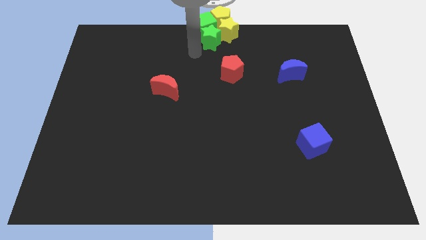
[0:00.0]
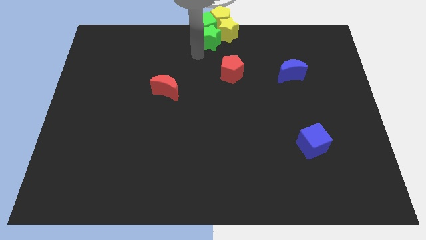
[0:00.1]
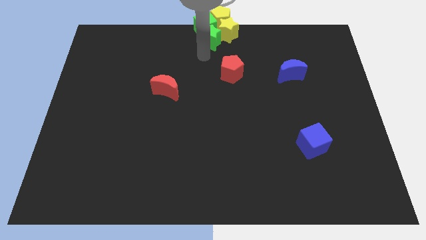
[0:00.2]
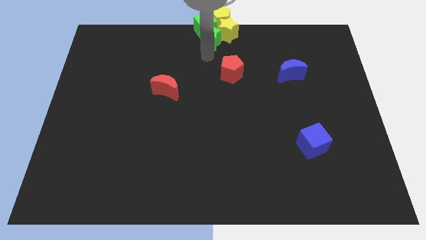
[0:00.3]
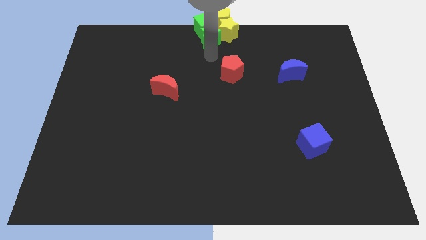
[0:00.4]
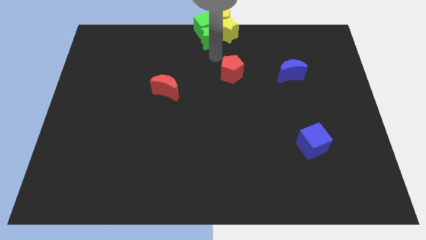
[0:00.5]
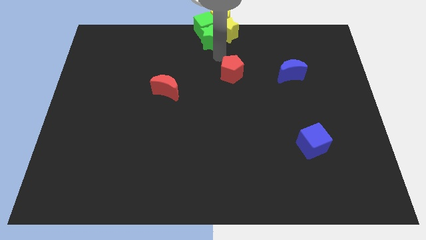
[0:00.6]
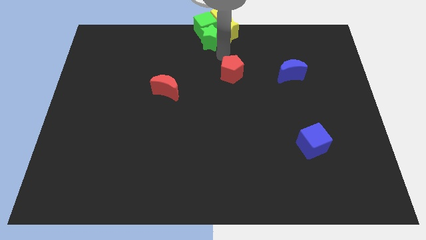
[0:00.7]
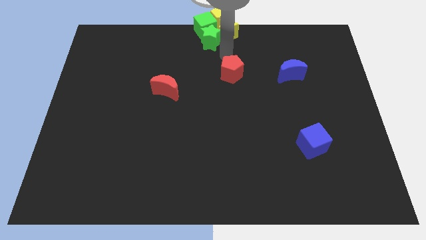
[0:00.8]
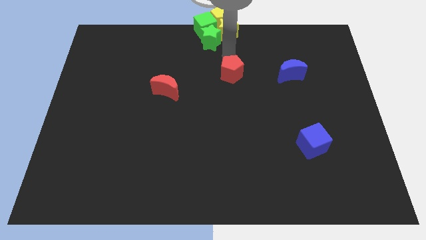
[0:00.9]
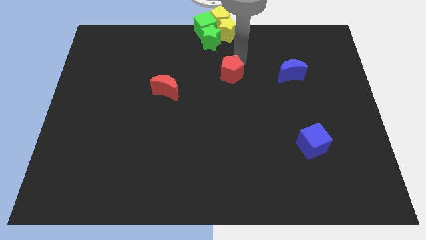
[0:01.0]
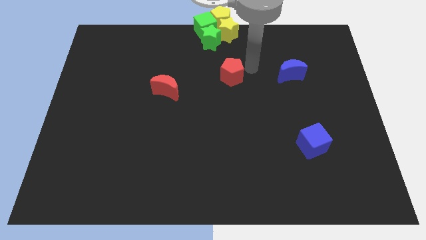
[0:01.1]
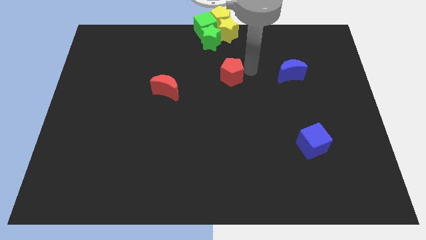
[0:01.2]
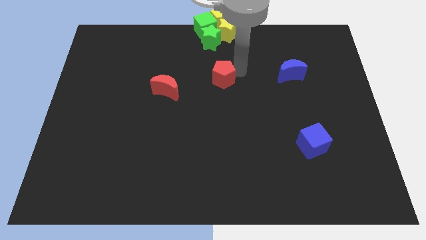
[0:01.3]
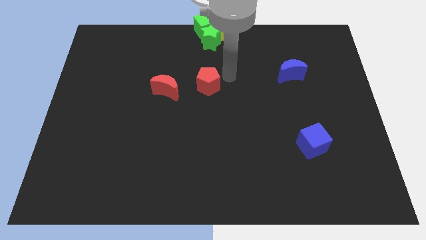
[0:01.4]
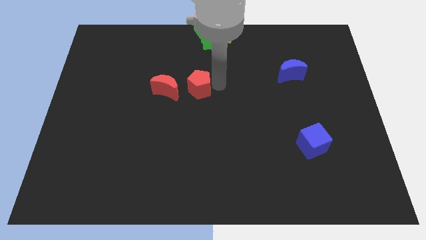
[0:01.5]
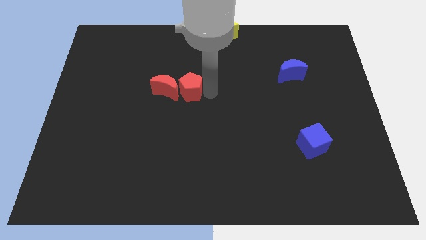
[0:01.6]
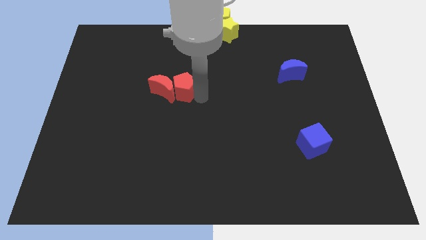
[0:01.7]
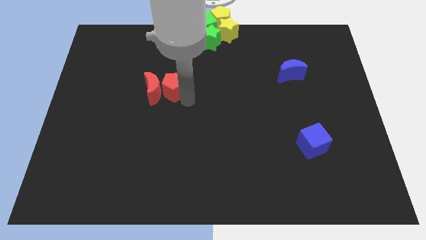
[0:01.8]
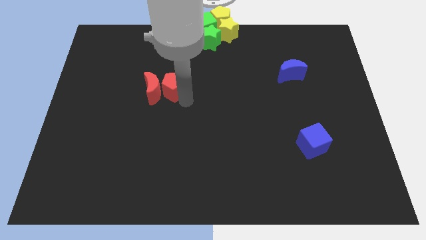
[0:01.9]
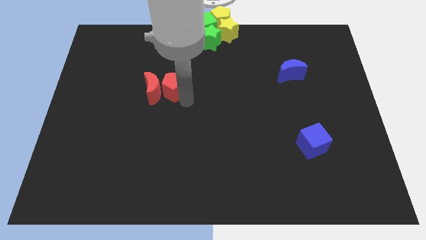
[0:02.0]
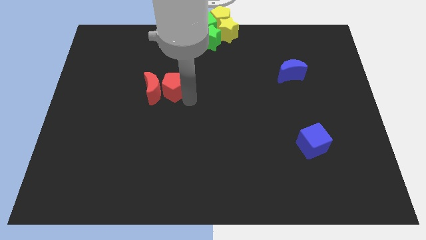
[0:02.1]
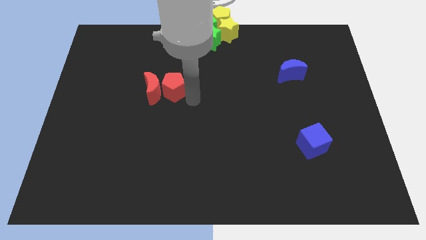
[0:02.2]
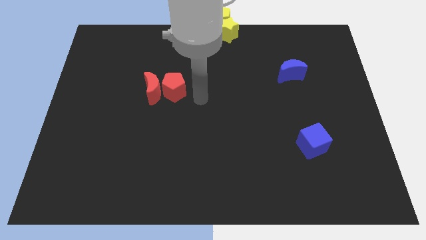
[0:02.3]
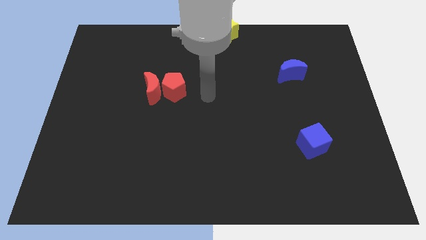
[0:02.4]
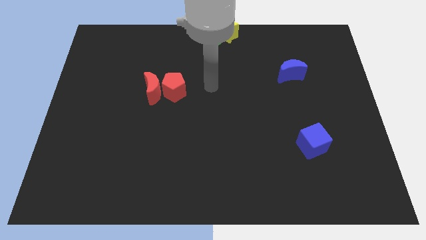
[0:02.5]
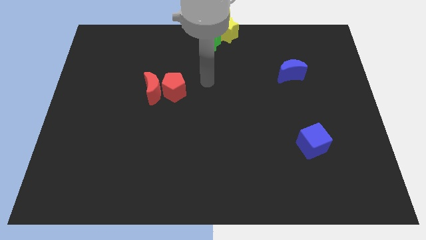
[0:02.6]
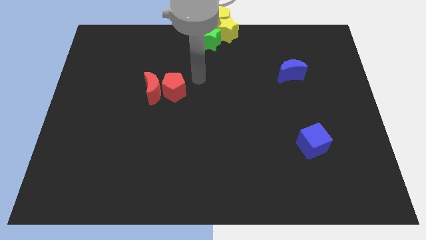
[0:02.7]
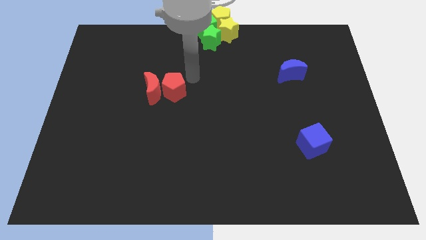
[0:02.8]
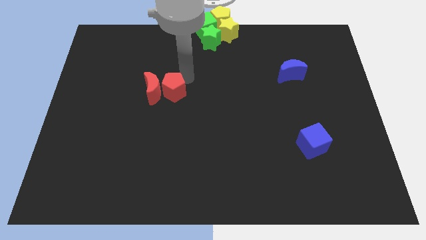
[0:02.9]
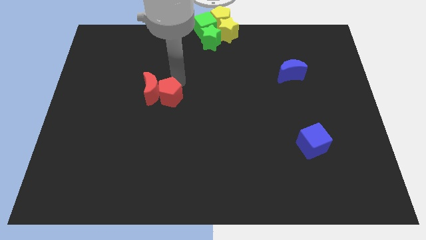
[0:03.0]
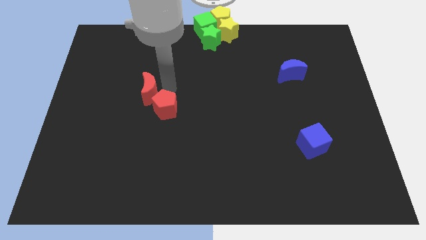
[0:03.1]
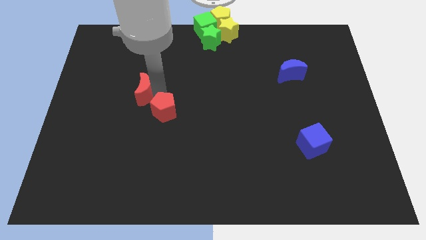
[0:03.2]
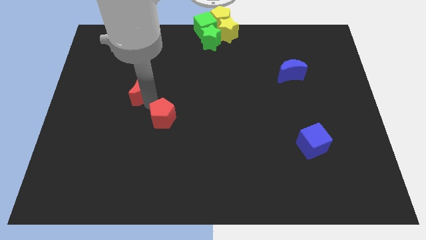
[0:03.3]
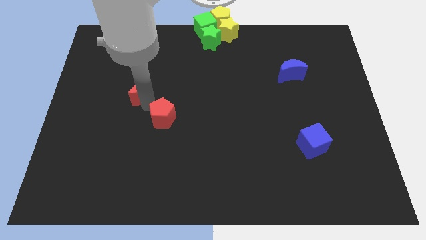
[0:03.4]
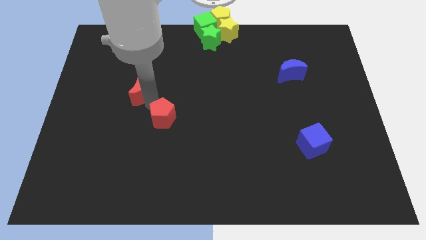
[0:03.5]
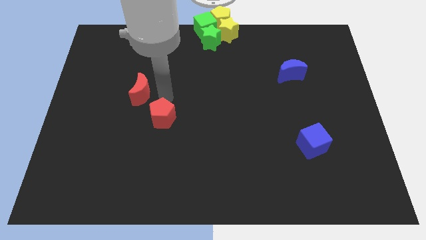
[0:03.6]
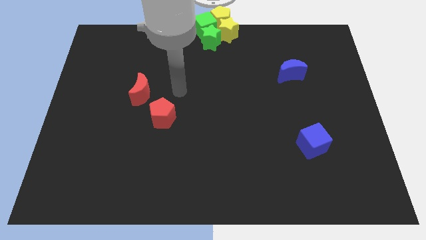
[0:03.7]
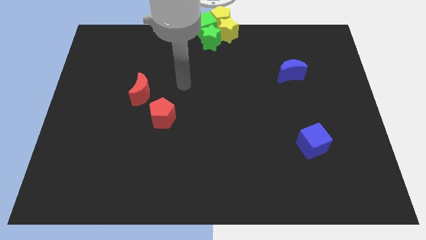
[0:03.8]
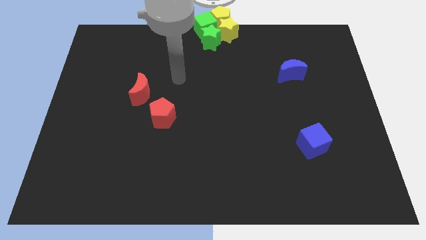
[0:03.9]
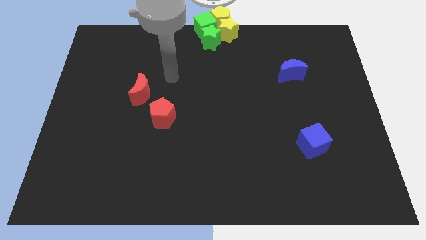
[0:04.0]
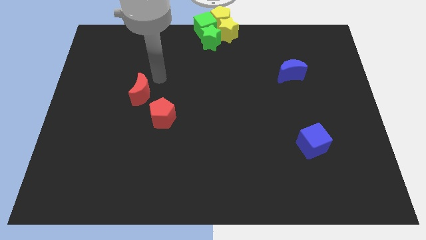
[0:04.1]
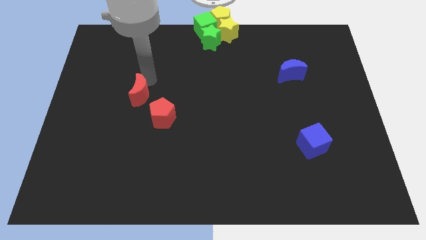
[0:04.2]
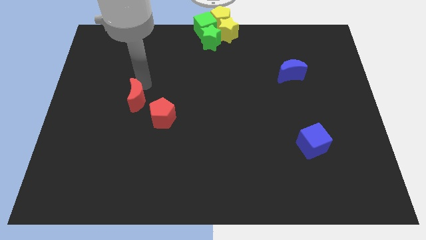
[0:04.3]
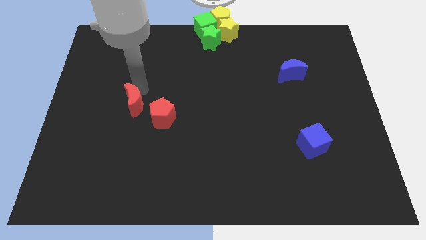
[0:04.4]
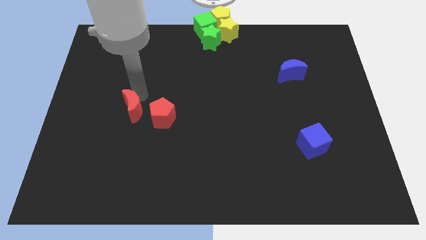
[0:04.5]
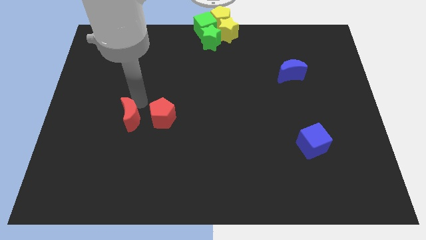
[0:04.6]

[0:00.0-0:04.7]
place red moon to the left of red pentagon

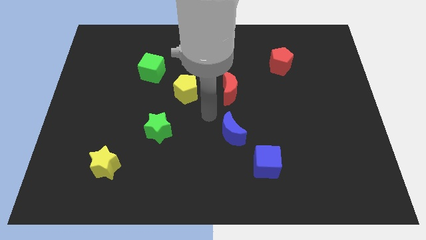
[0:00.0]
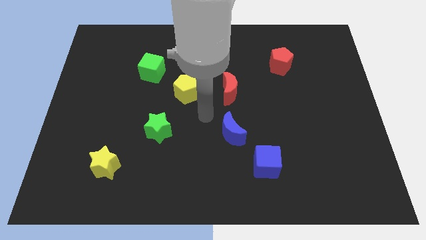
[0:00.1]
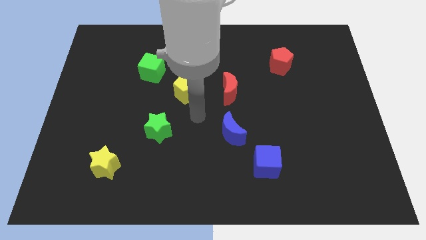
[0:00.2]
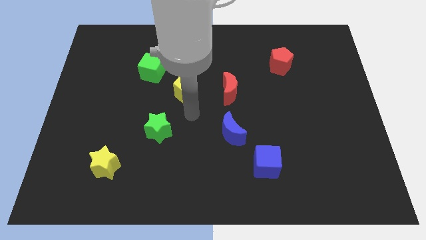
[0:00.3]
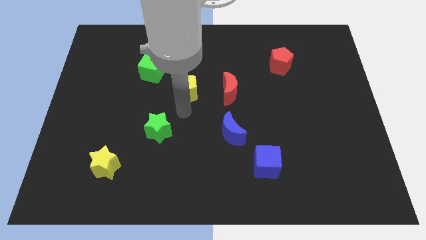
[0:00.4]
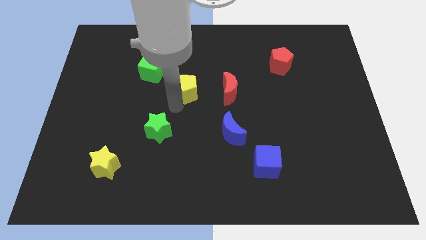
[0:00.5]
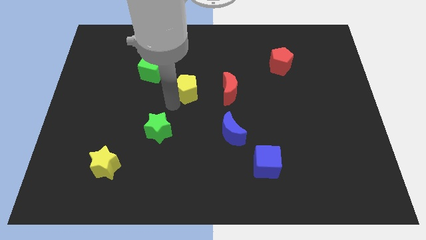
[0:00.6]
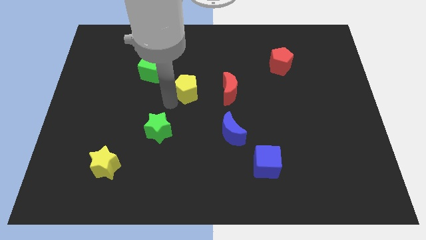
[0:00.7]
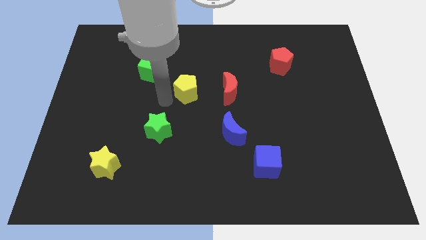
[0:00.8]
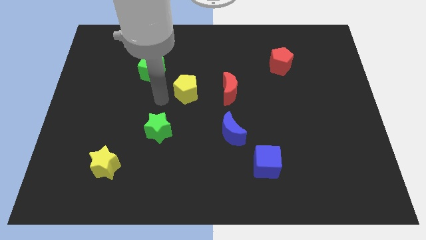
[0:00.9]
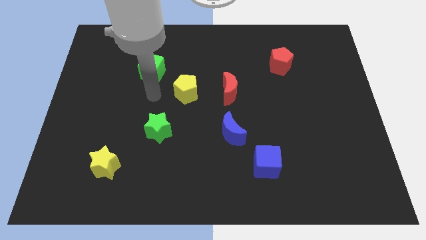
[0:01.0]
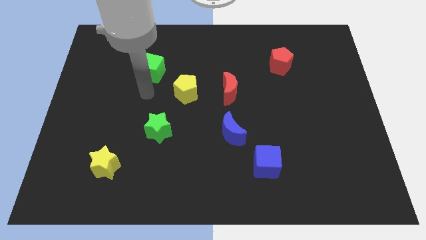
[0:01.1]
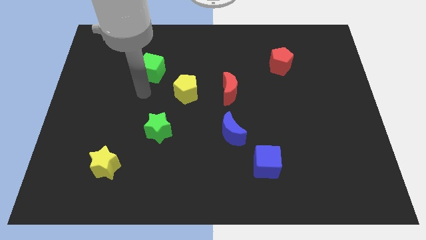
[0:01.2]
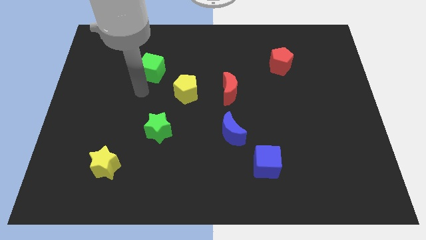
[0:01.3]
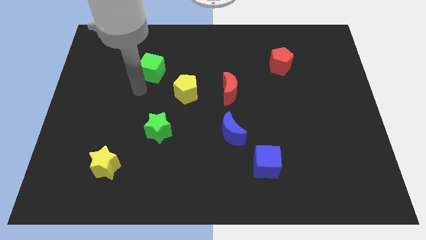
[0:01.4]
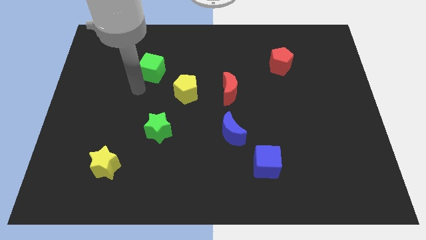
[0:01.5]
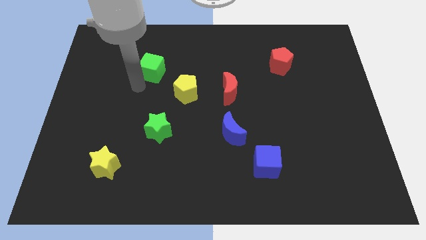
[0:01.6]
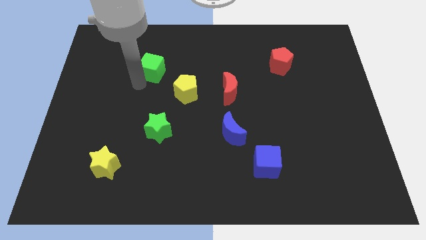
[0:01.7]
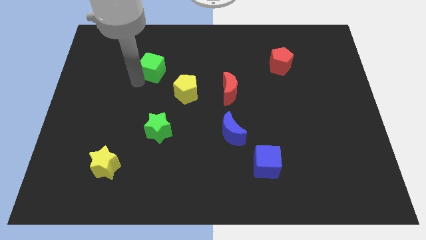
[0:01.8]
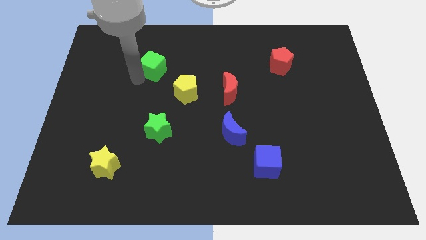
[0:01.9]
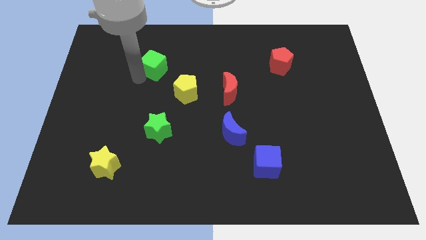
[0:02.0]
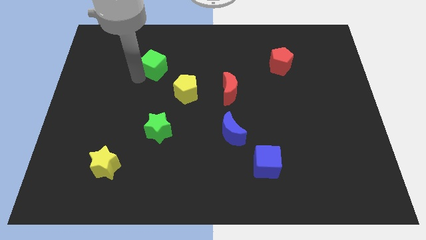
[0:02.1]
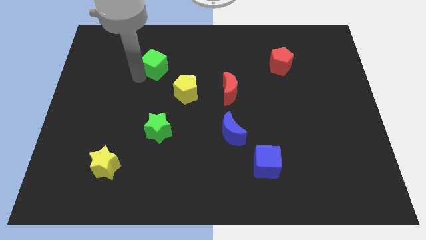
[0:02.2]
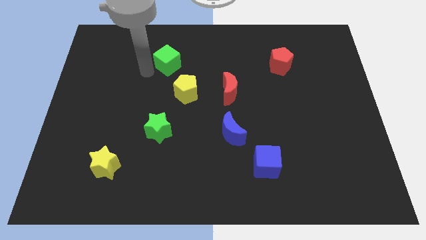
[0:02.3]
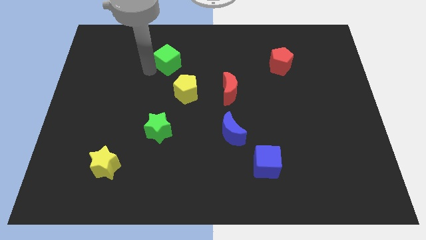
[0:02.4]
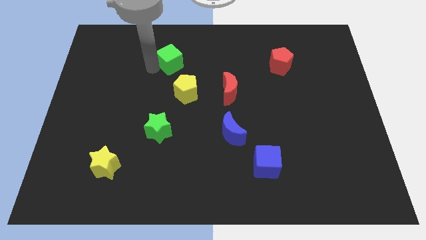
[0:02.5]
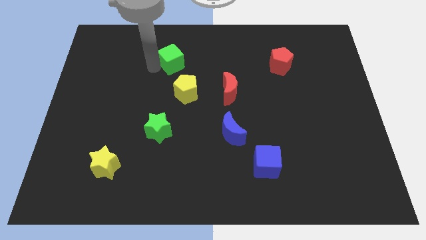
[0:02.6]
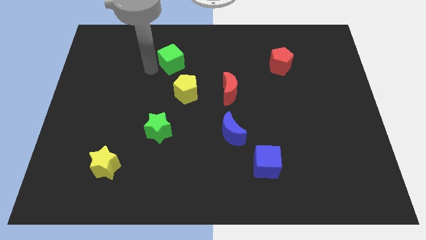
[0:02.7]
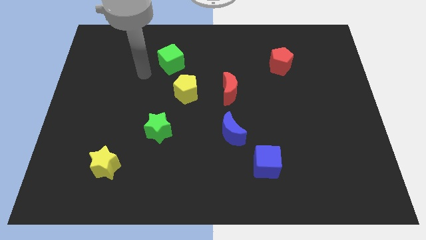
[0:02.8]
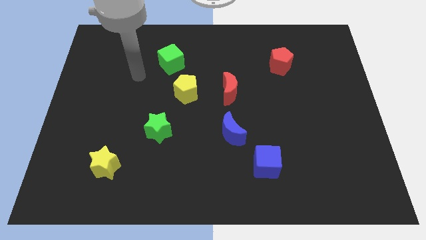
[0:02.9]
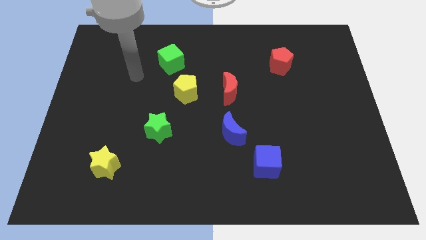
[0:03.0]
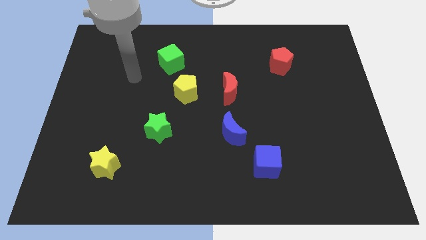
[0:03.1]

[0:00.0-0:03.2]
slide the green cube to the top of the yellow pentagon

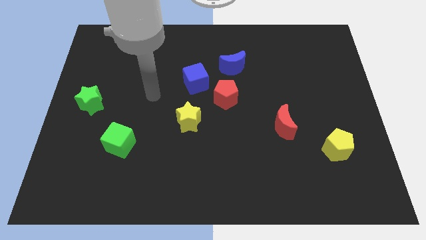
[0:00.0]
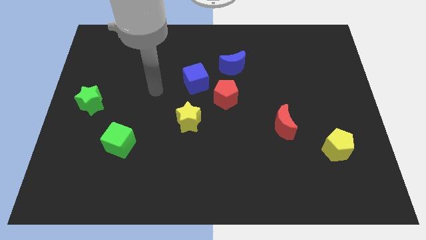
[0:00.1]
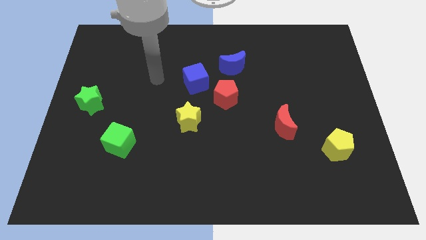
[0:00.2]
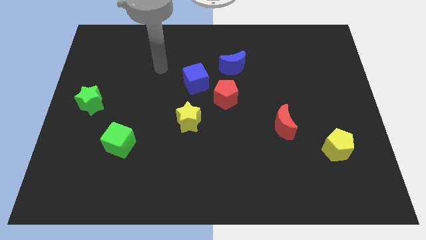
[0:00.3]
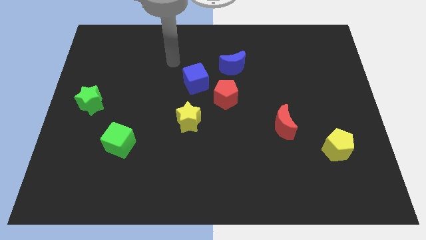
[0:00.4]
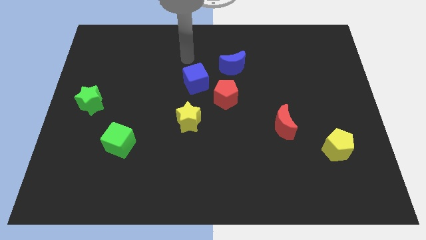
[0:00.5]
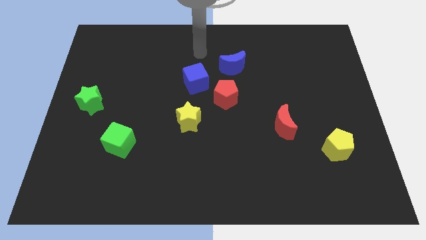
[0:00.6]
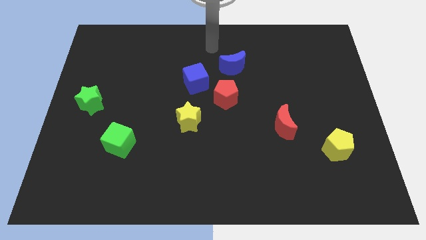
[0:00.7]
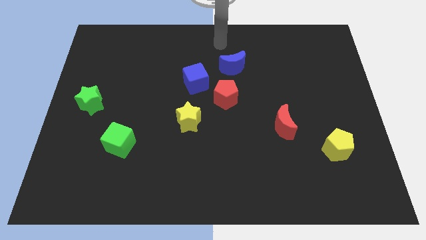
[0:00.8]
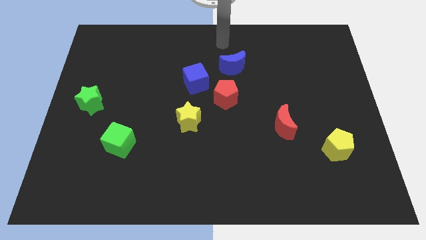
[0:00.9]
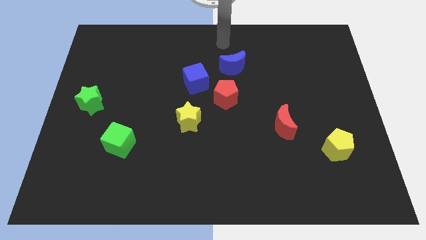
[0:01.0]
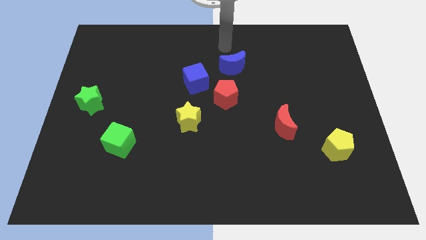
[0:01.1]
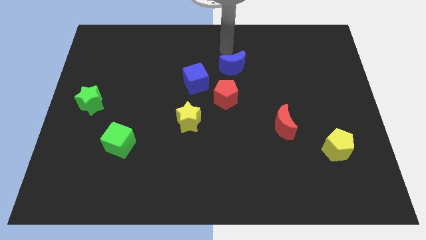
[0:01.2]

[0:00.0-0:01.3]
point your arm at the top of the blue crescent
